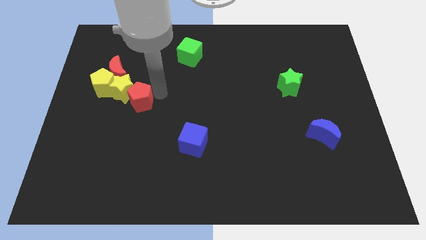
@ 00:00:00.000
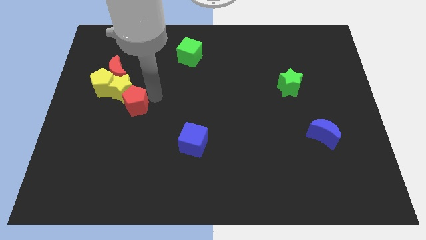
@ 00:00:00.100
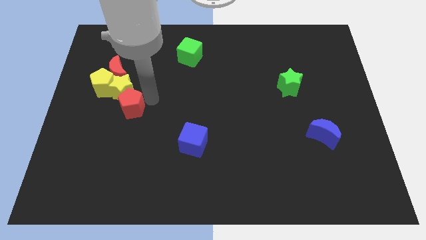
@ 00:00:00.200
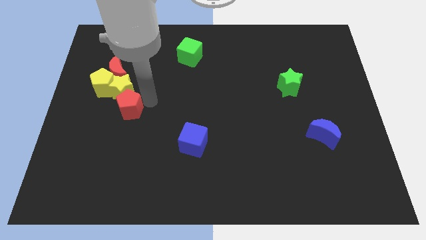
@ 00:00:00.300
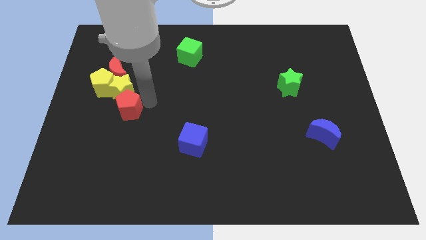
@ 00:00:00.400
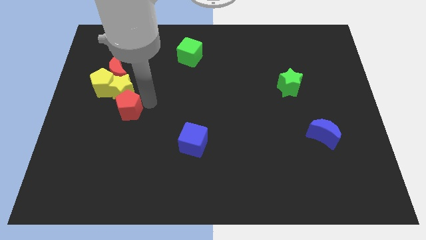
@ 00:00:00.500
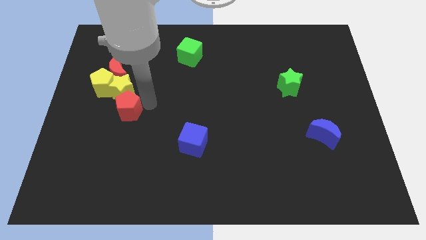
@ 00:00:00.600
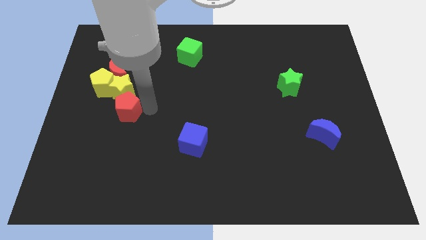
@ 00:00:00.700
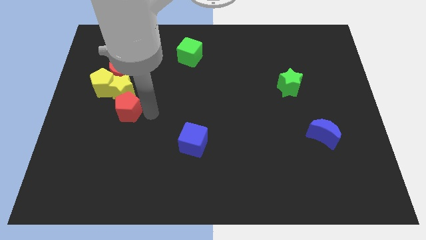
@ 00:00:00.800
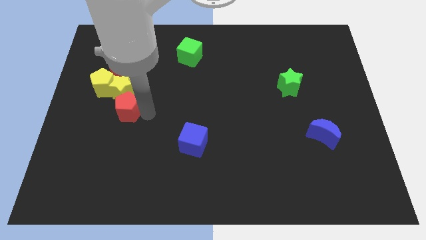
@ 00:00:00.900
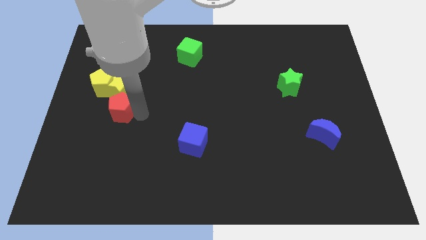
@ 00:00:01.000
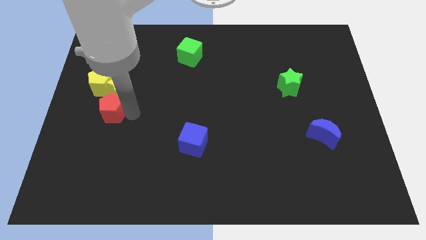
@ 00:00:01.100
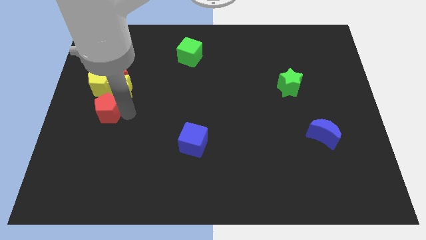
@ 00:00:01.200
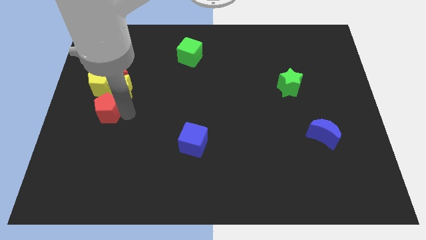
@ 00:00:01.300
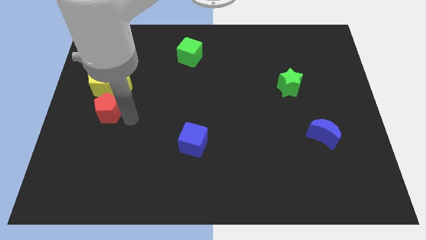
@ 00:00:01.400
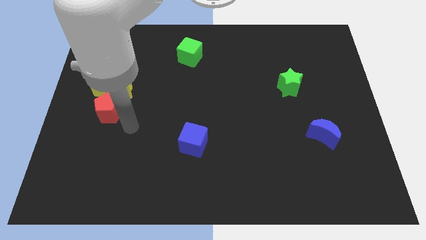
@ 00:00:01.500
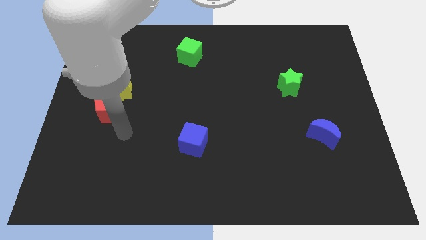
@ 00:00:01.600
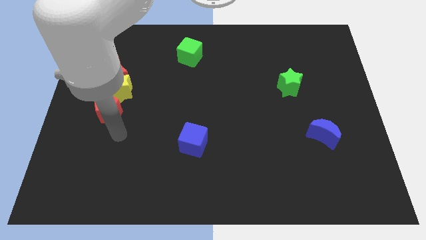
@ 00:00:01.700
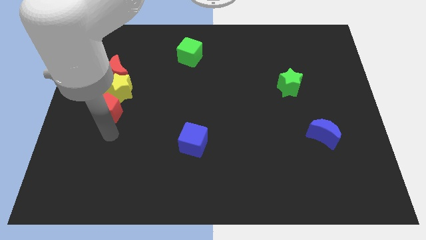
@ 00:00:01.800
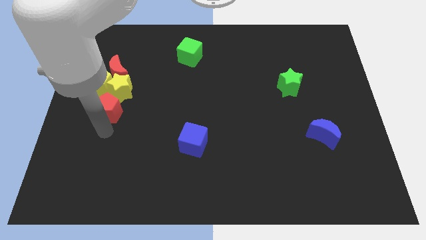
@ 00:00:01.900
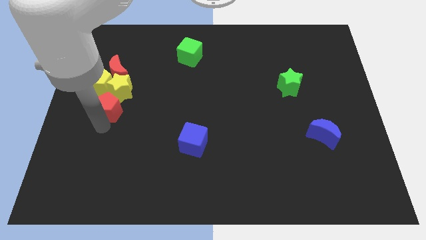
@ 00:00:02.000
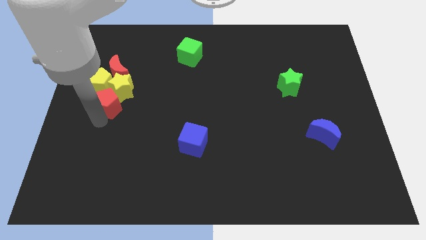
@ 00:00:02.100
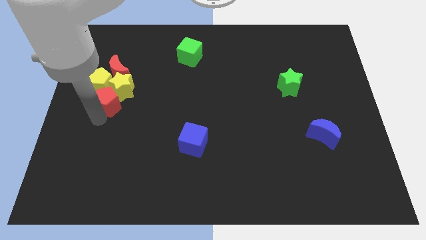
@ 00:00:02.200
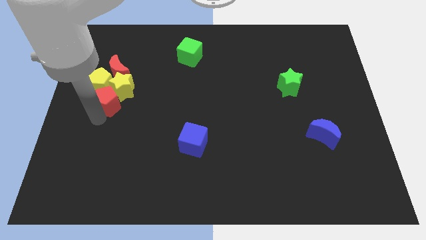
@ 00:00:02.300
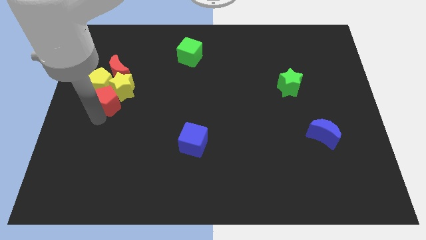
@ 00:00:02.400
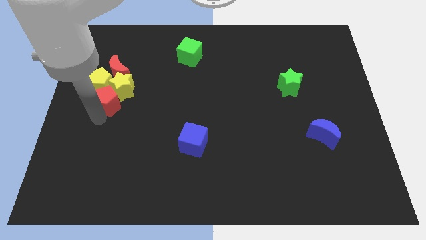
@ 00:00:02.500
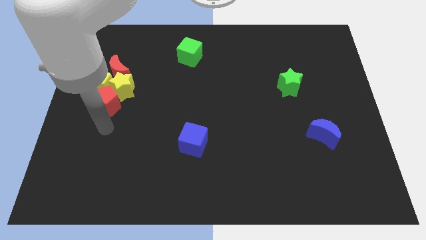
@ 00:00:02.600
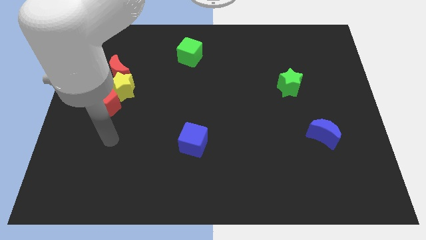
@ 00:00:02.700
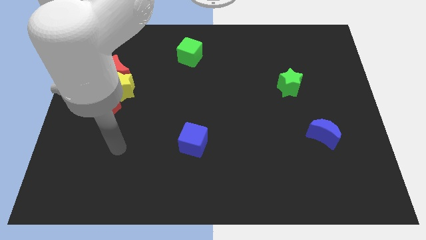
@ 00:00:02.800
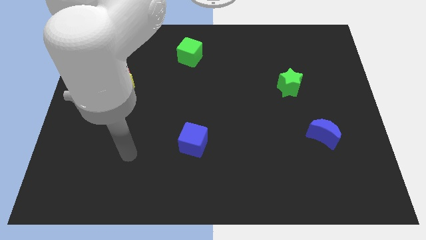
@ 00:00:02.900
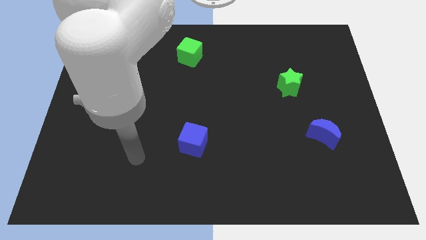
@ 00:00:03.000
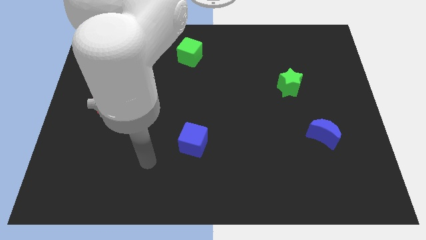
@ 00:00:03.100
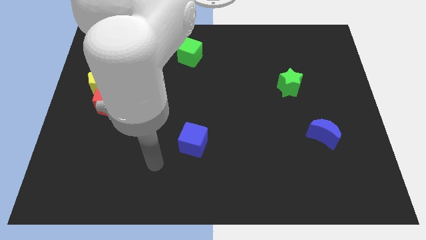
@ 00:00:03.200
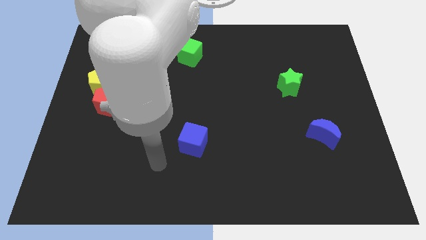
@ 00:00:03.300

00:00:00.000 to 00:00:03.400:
place the red pentagon towards the bottom of the yellow star

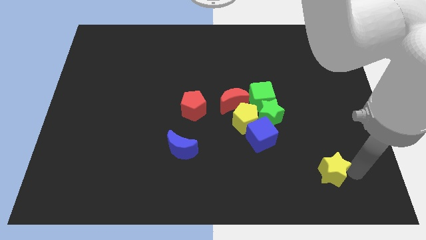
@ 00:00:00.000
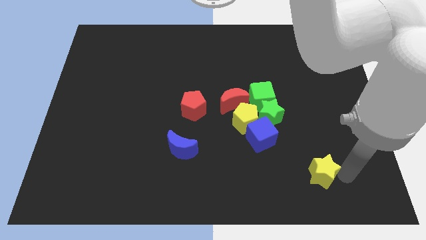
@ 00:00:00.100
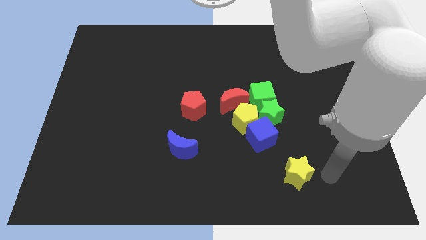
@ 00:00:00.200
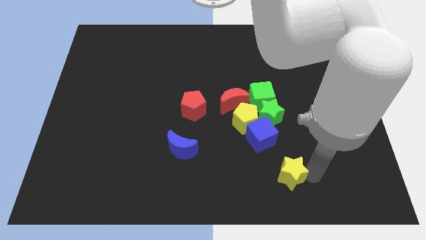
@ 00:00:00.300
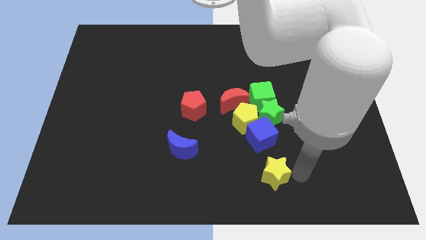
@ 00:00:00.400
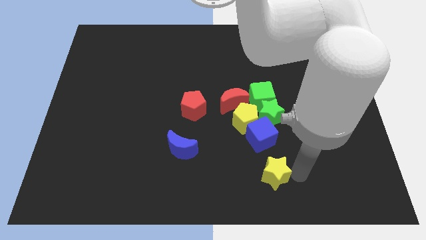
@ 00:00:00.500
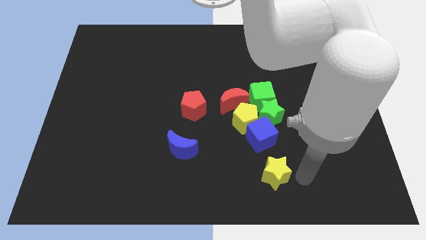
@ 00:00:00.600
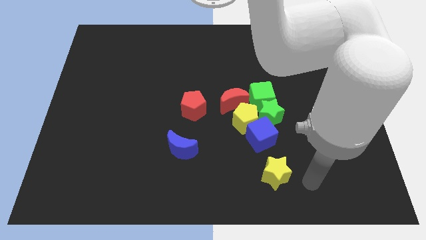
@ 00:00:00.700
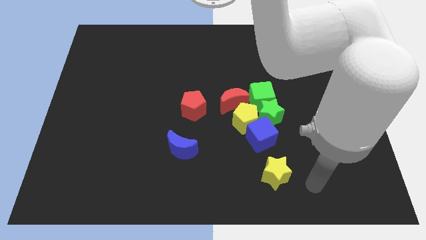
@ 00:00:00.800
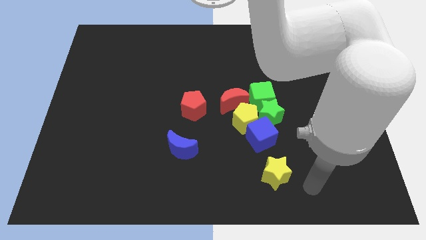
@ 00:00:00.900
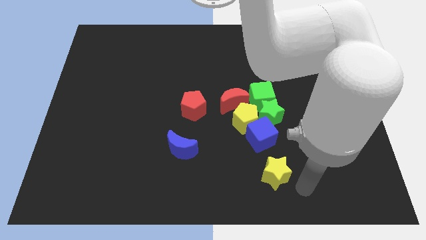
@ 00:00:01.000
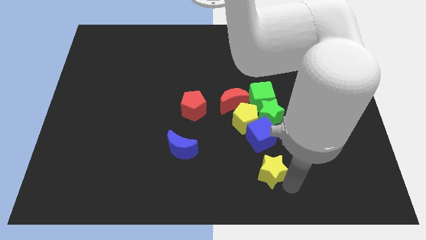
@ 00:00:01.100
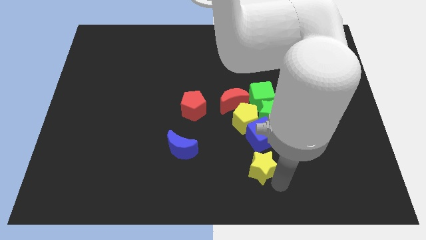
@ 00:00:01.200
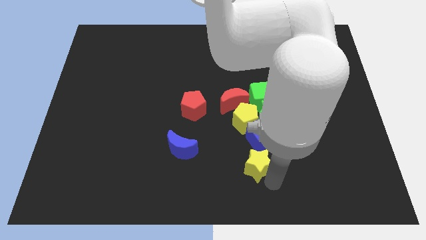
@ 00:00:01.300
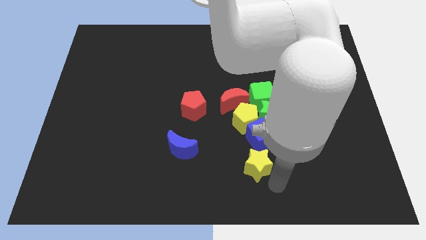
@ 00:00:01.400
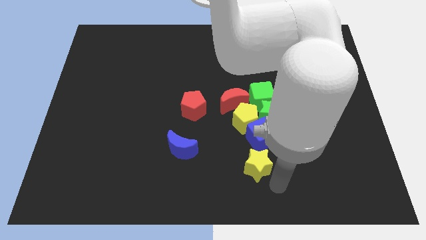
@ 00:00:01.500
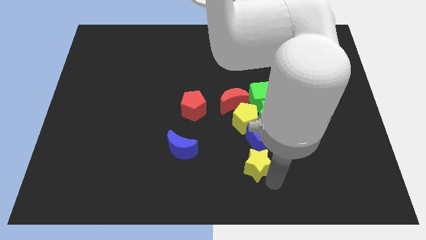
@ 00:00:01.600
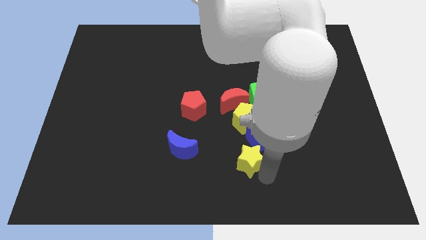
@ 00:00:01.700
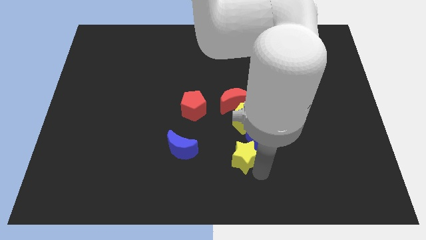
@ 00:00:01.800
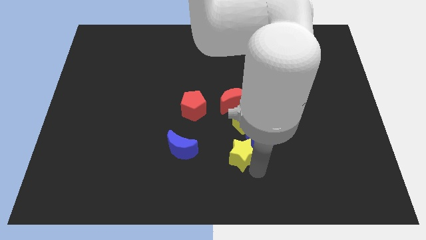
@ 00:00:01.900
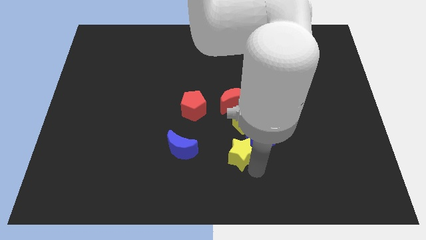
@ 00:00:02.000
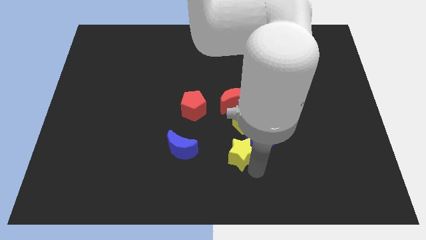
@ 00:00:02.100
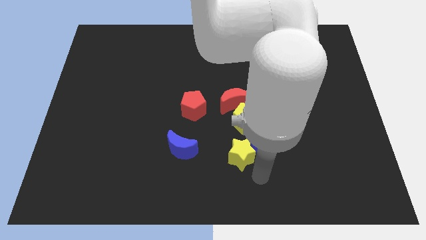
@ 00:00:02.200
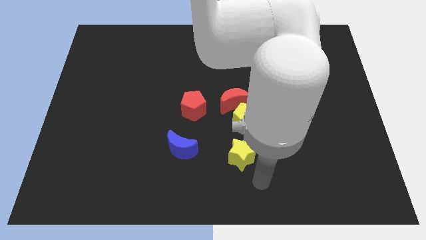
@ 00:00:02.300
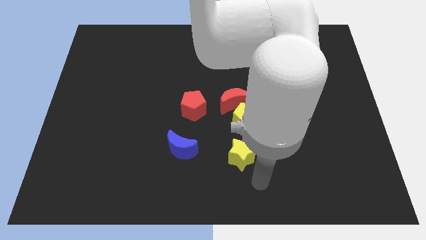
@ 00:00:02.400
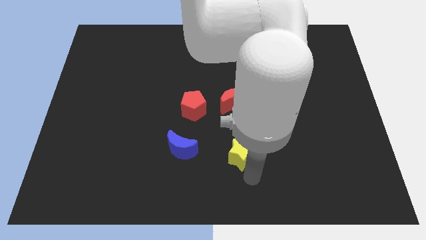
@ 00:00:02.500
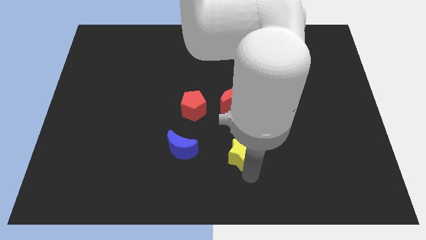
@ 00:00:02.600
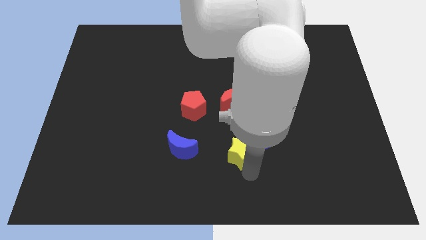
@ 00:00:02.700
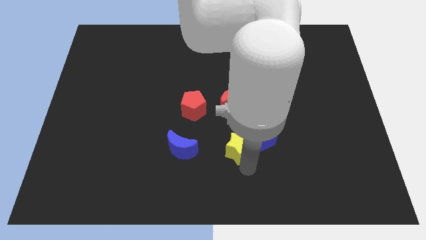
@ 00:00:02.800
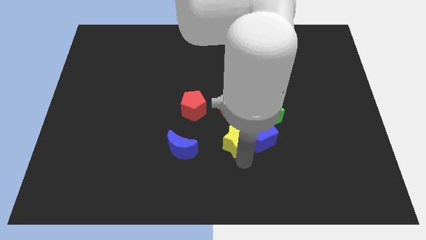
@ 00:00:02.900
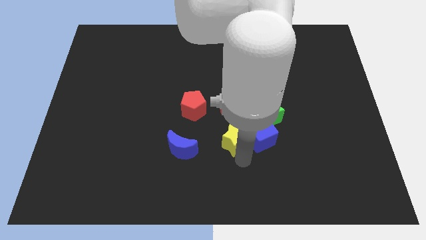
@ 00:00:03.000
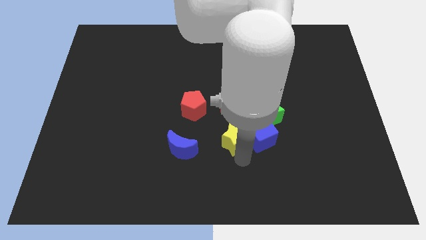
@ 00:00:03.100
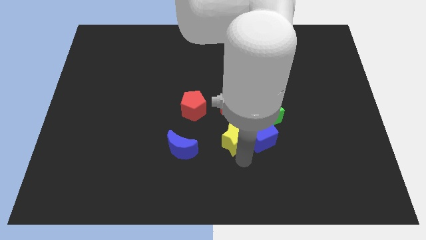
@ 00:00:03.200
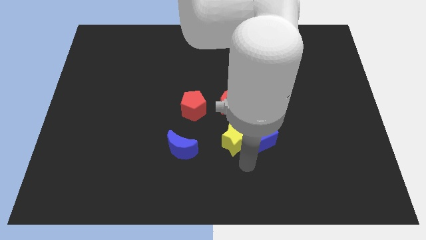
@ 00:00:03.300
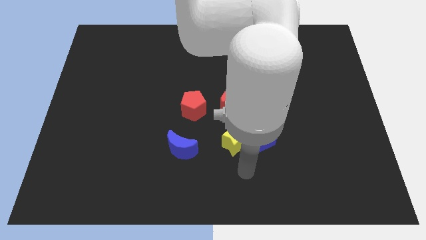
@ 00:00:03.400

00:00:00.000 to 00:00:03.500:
place the yellow star to the left of the blue cube

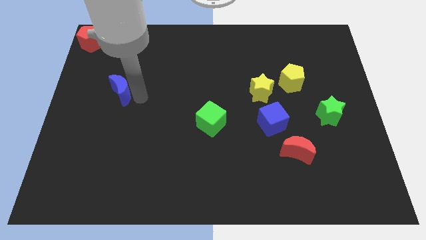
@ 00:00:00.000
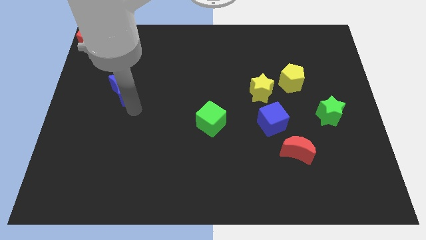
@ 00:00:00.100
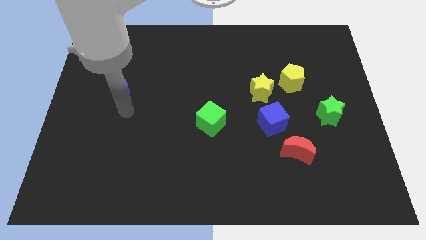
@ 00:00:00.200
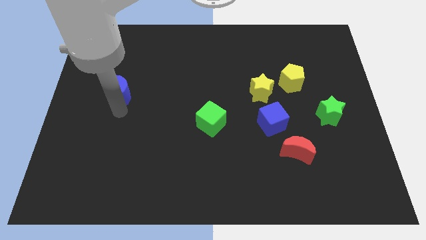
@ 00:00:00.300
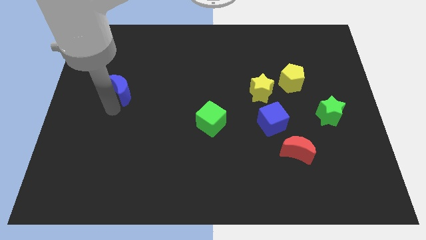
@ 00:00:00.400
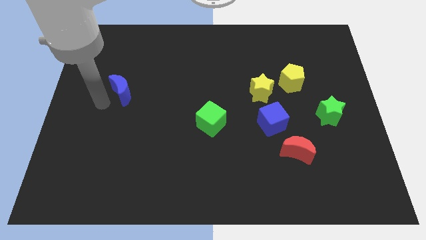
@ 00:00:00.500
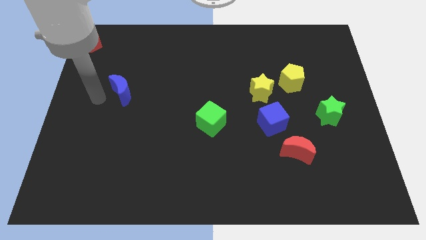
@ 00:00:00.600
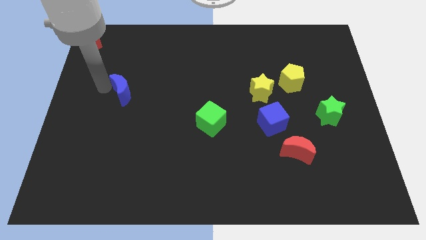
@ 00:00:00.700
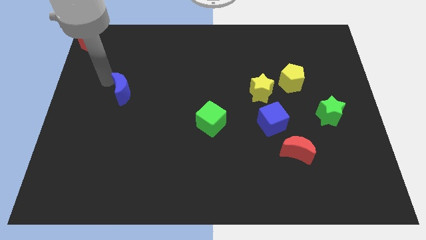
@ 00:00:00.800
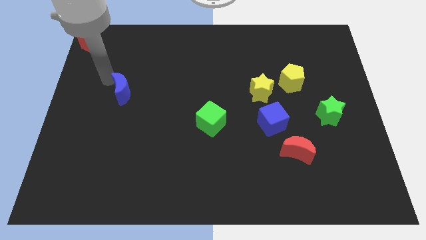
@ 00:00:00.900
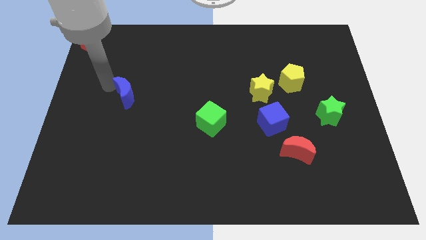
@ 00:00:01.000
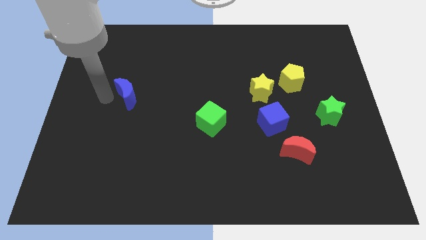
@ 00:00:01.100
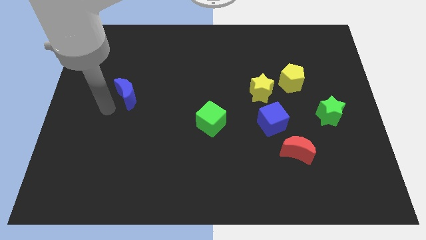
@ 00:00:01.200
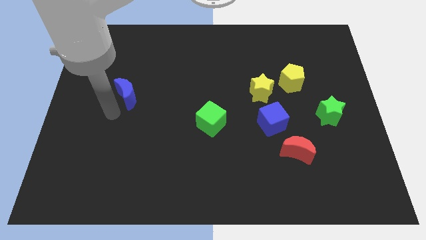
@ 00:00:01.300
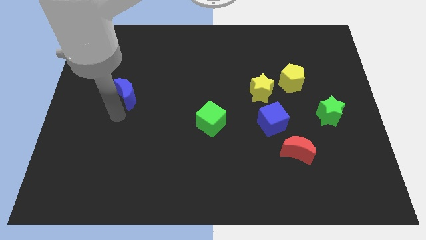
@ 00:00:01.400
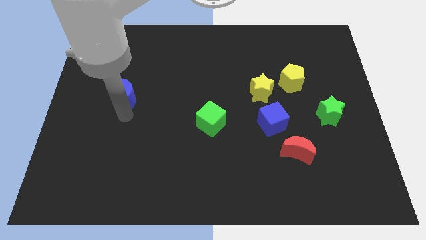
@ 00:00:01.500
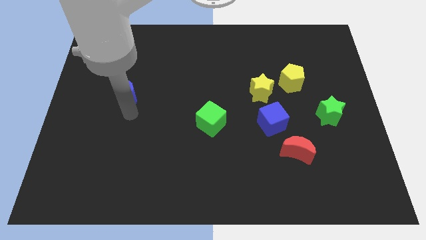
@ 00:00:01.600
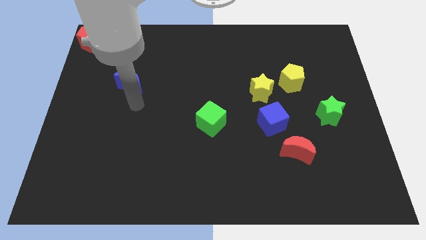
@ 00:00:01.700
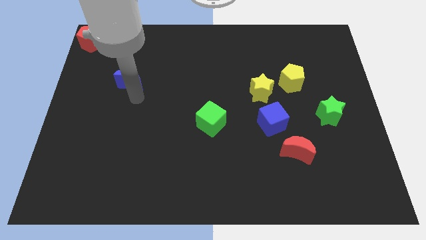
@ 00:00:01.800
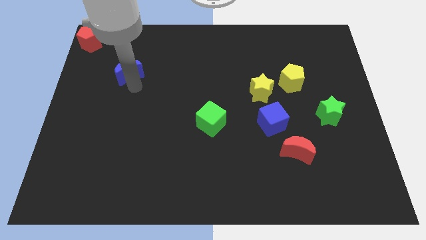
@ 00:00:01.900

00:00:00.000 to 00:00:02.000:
push the blue moon towards upwards to the red crescent
